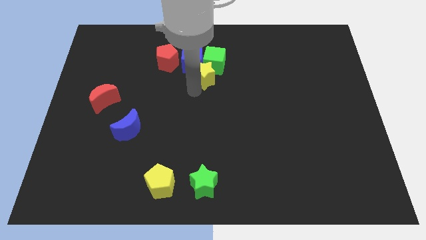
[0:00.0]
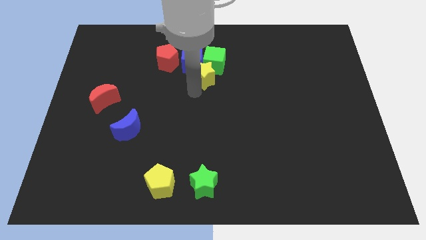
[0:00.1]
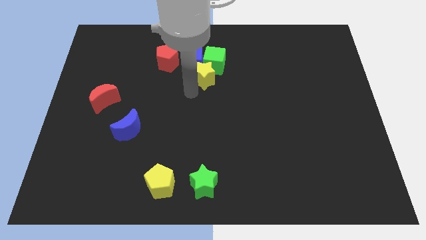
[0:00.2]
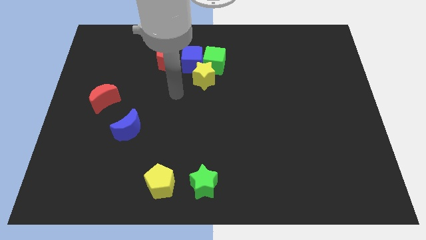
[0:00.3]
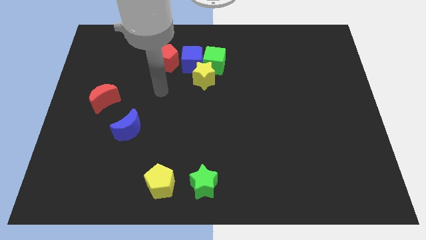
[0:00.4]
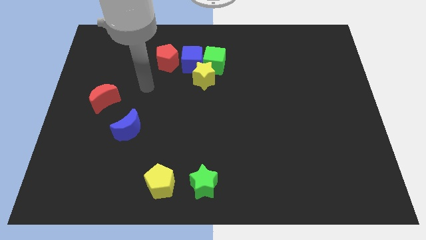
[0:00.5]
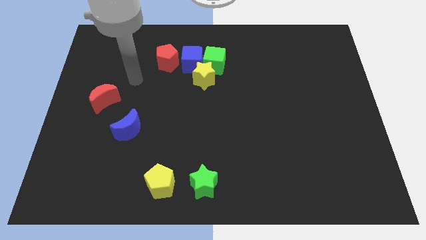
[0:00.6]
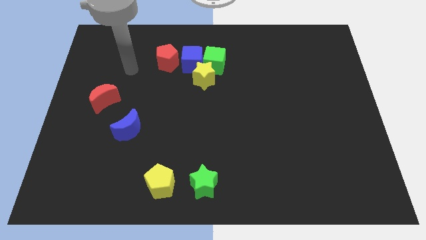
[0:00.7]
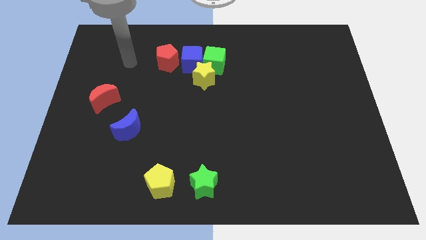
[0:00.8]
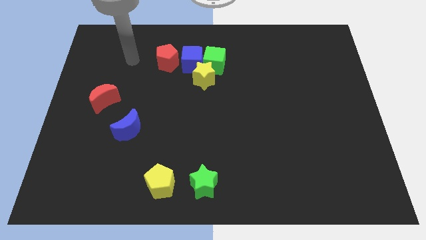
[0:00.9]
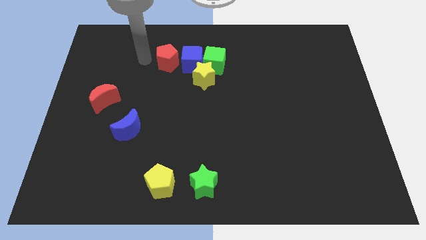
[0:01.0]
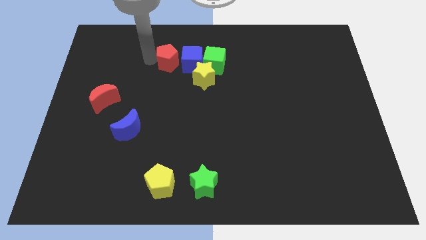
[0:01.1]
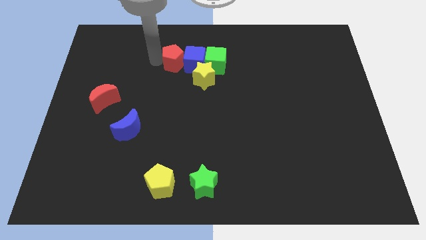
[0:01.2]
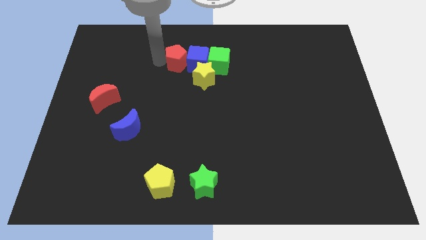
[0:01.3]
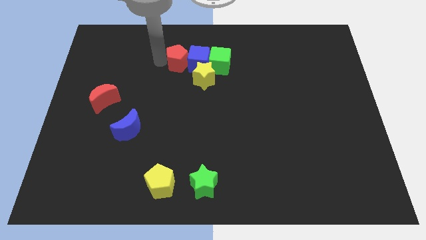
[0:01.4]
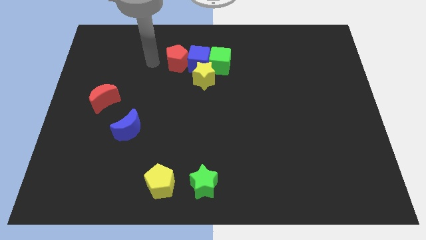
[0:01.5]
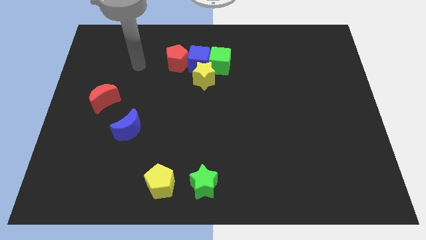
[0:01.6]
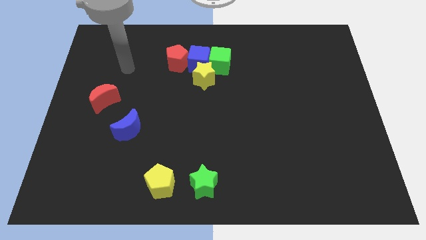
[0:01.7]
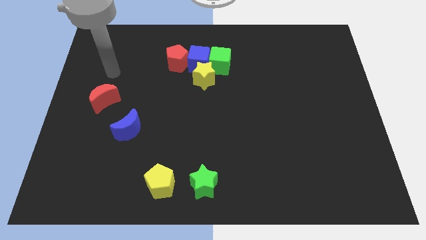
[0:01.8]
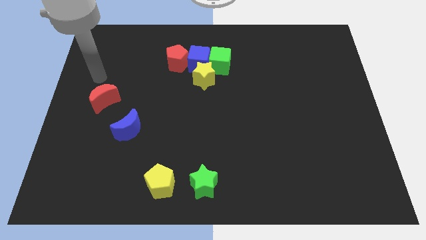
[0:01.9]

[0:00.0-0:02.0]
push the red pentagon into the blue cube

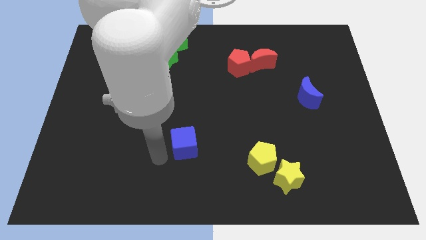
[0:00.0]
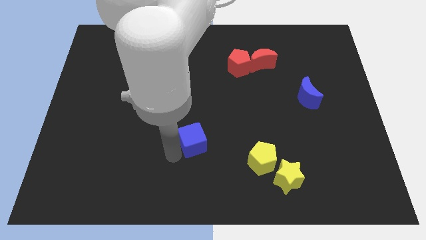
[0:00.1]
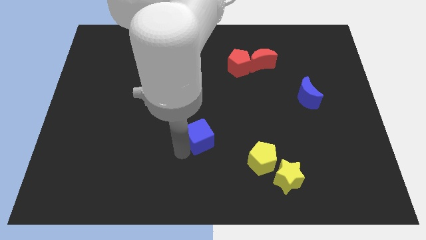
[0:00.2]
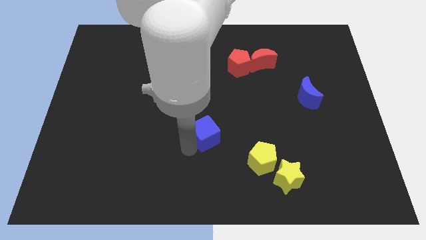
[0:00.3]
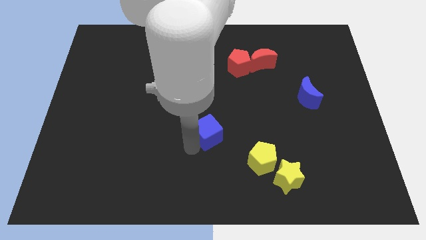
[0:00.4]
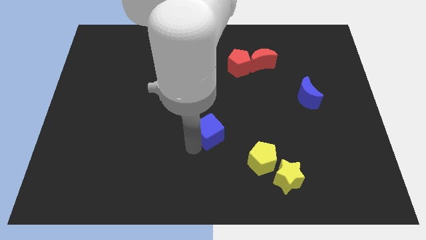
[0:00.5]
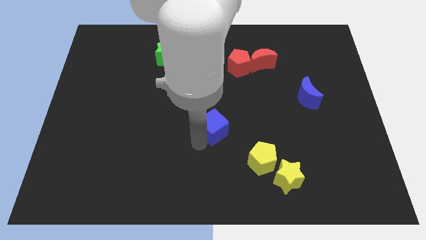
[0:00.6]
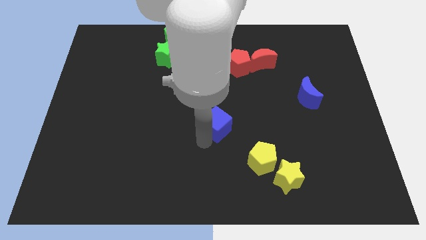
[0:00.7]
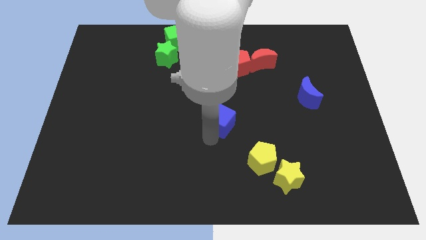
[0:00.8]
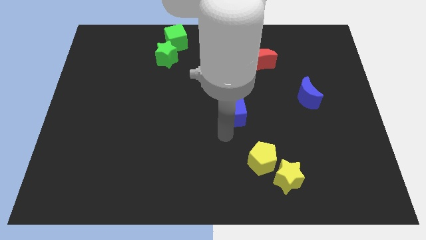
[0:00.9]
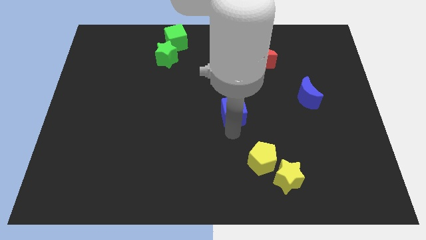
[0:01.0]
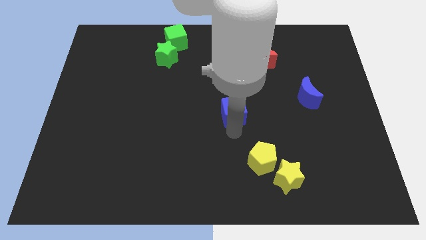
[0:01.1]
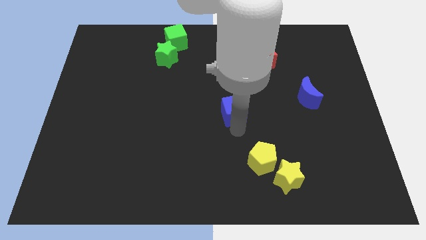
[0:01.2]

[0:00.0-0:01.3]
move the blue cube above to the yellow pentagon block

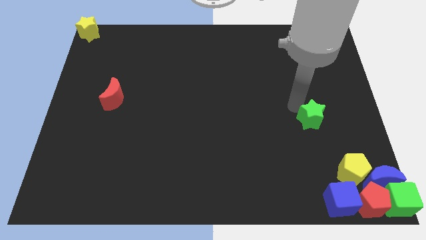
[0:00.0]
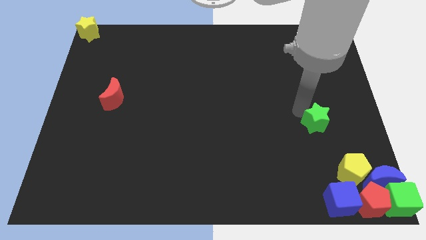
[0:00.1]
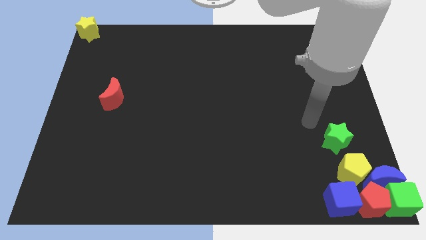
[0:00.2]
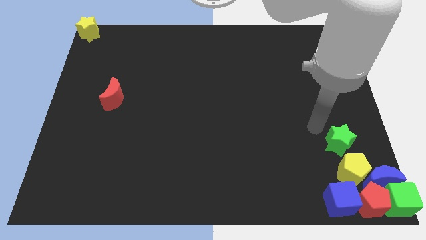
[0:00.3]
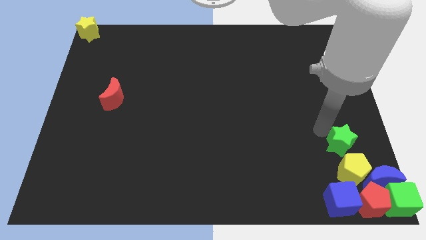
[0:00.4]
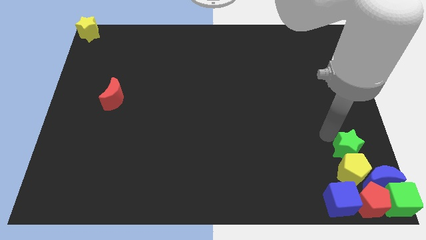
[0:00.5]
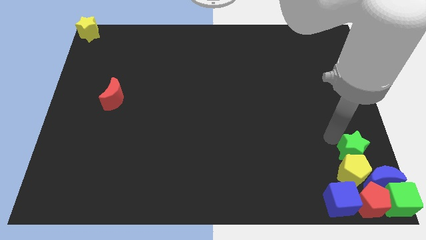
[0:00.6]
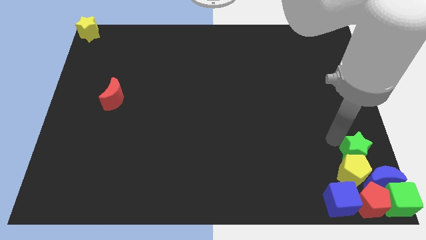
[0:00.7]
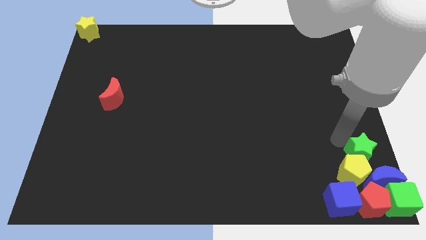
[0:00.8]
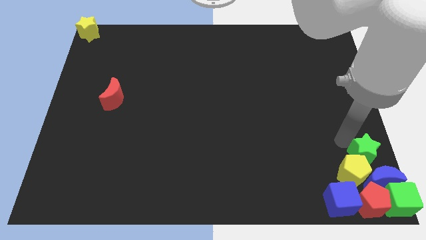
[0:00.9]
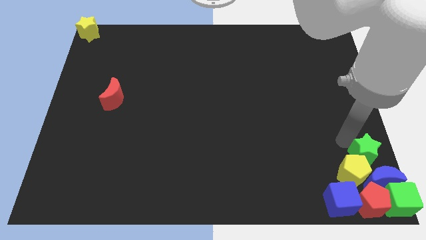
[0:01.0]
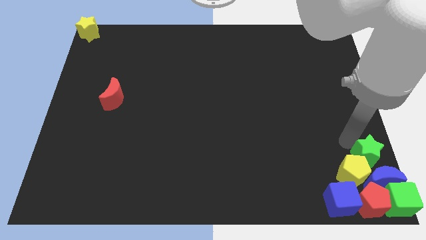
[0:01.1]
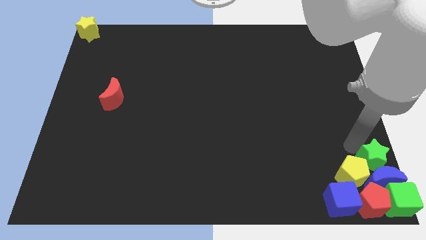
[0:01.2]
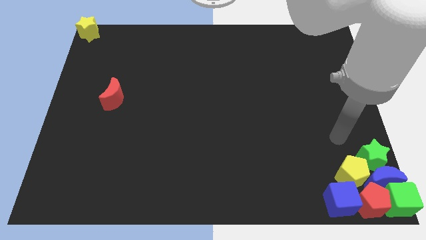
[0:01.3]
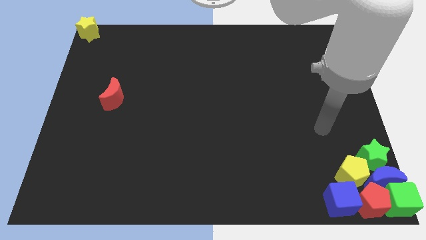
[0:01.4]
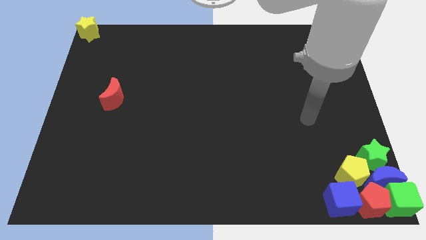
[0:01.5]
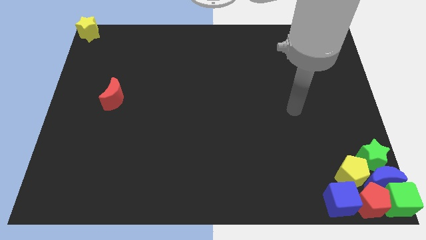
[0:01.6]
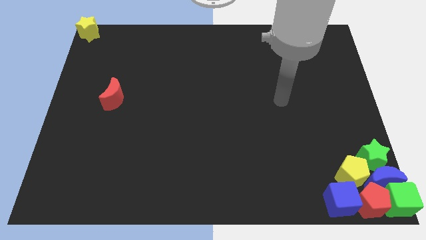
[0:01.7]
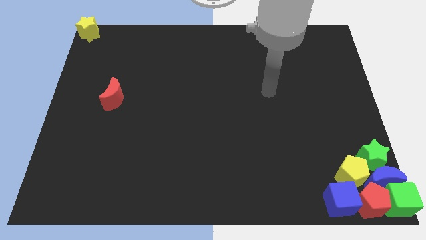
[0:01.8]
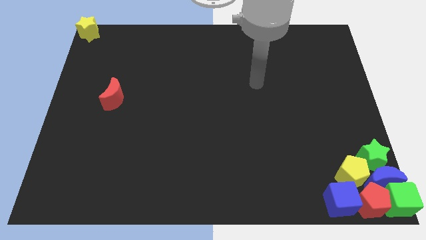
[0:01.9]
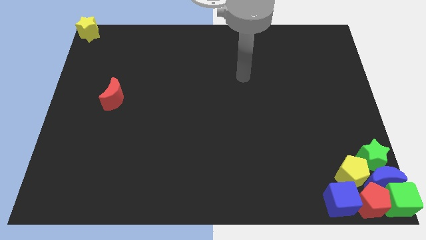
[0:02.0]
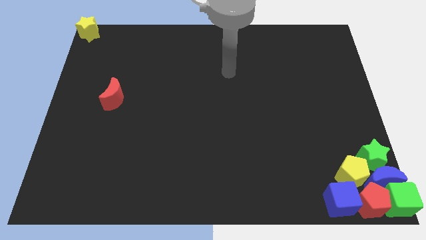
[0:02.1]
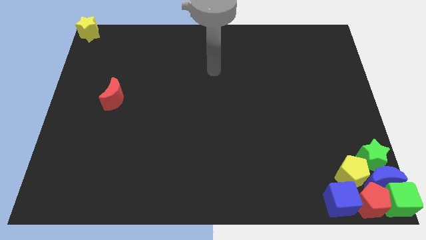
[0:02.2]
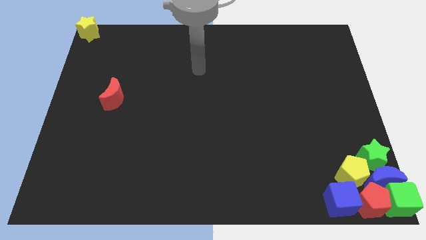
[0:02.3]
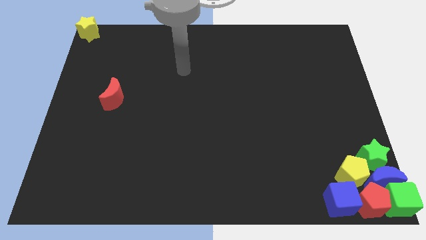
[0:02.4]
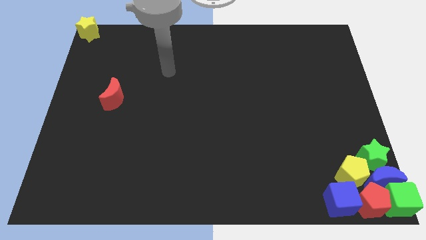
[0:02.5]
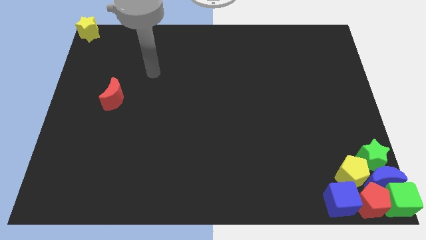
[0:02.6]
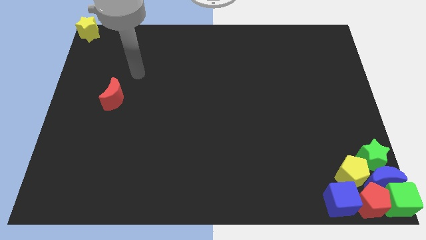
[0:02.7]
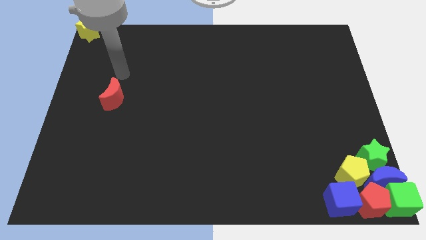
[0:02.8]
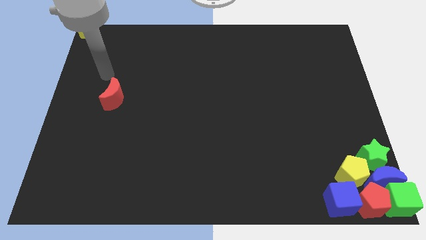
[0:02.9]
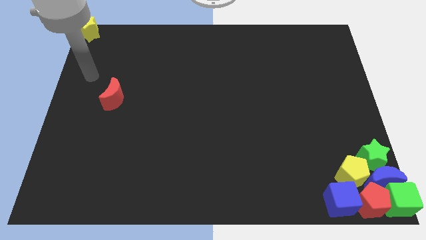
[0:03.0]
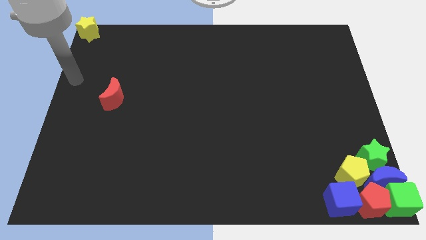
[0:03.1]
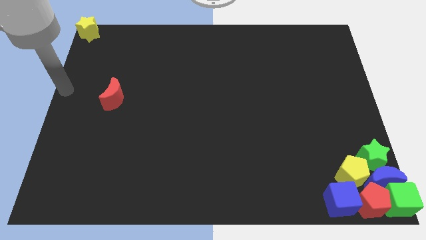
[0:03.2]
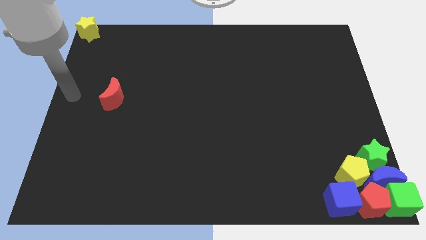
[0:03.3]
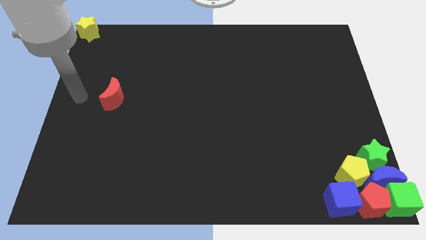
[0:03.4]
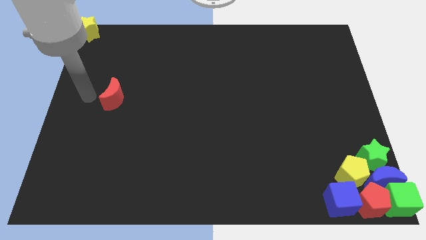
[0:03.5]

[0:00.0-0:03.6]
add the green star to the group of blocks at the bottom right corner of the board

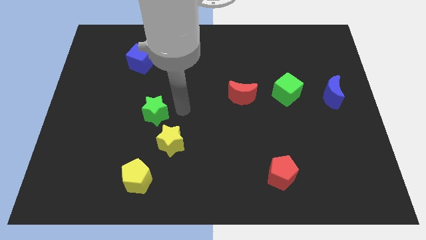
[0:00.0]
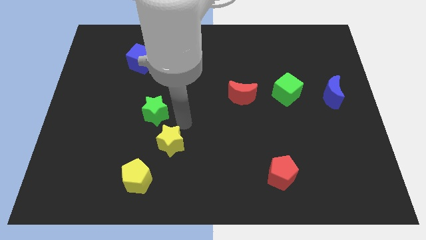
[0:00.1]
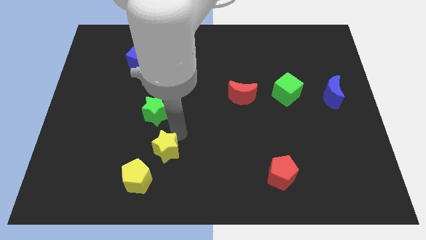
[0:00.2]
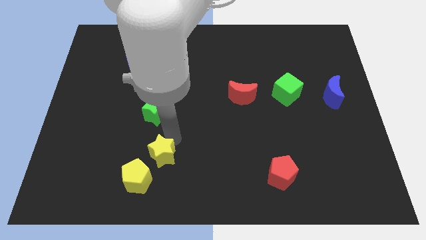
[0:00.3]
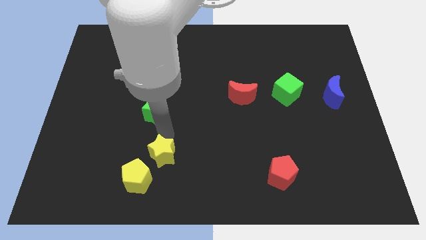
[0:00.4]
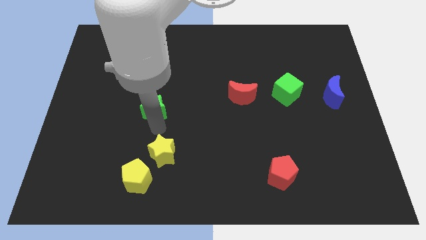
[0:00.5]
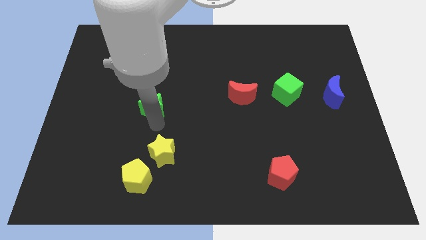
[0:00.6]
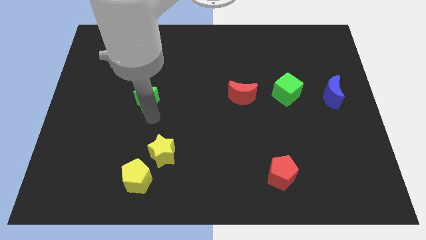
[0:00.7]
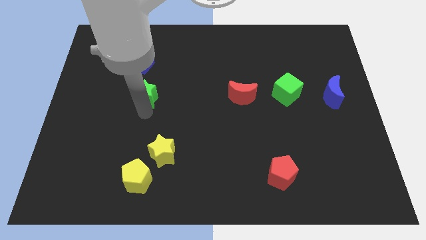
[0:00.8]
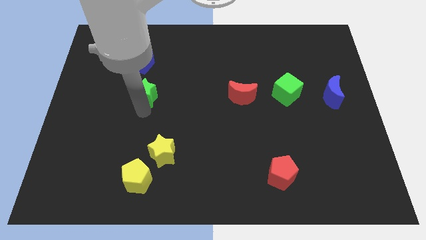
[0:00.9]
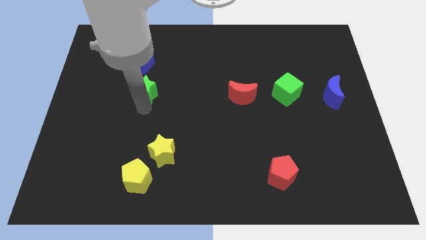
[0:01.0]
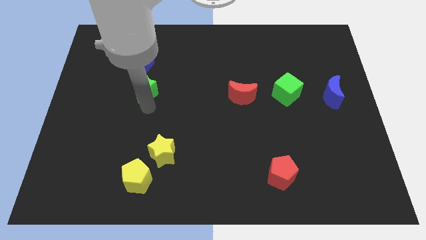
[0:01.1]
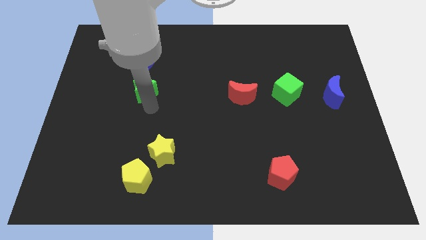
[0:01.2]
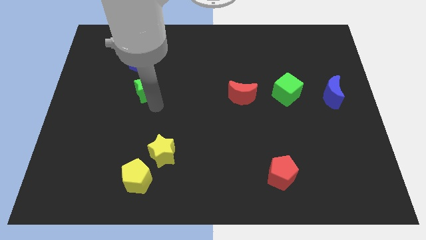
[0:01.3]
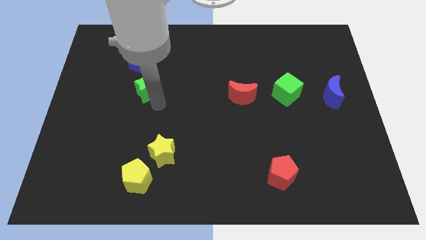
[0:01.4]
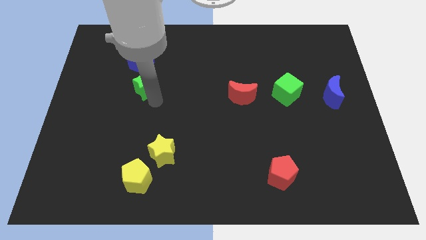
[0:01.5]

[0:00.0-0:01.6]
move green star and the yellow star away from each other

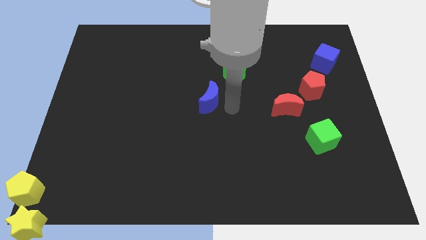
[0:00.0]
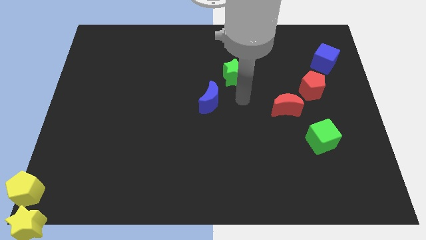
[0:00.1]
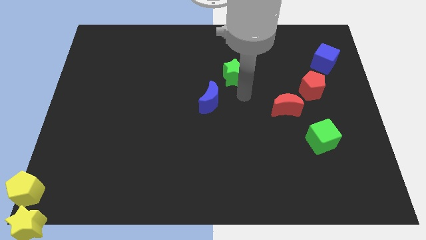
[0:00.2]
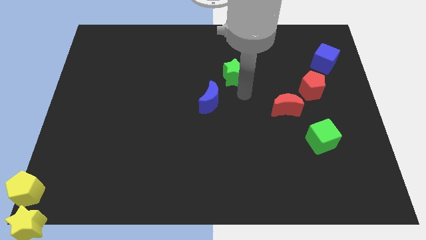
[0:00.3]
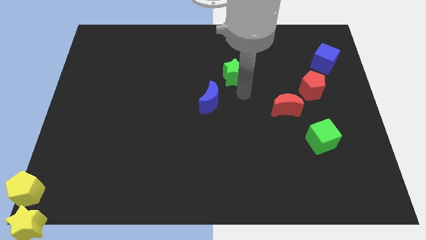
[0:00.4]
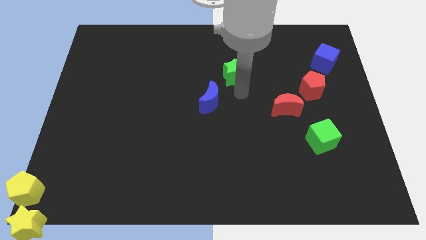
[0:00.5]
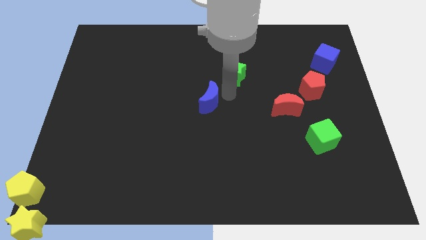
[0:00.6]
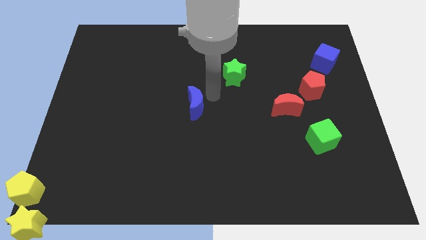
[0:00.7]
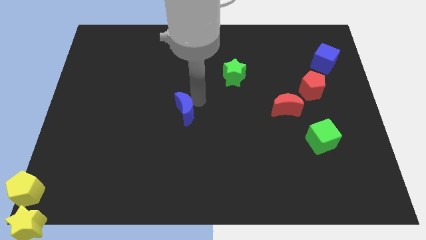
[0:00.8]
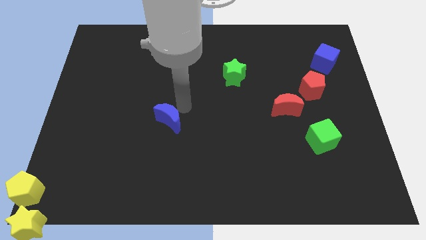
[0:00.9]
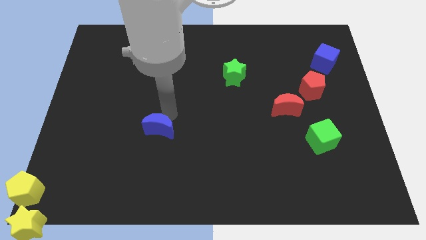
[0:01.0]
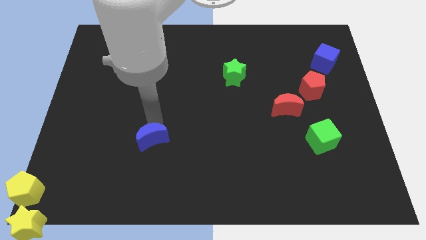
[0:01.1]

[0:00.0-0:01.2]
move the blue crescent towards the bottom side of the board
